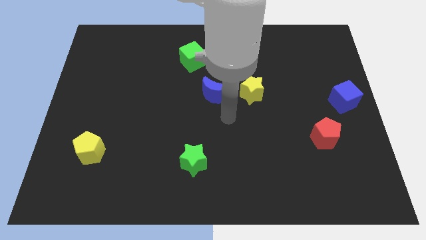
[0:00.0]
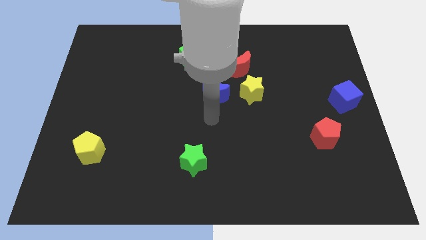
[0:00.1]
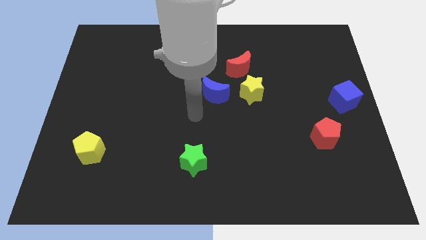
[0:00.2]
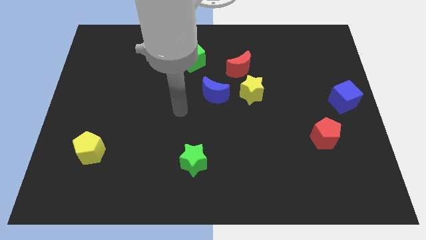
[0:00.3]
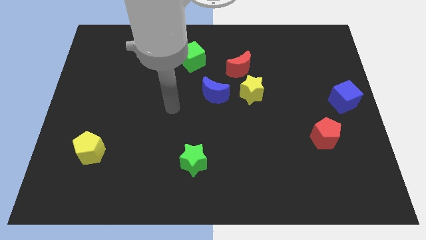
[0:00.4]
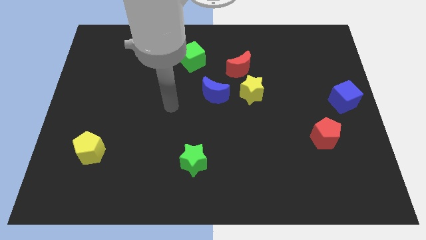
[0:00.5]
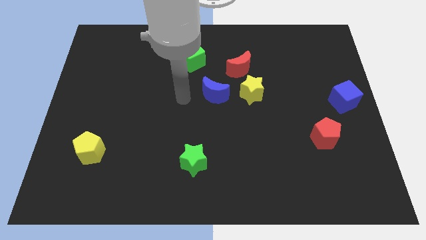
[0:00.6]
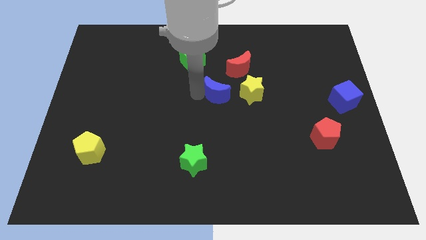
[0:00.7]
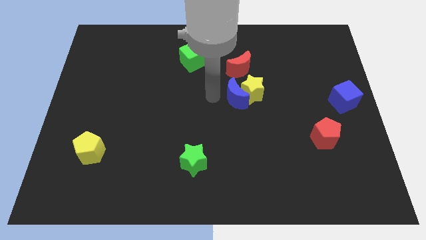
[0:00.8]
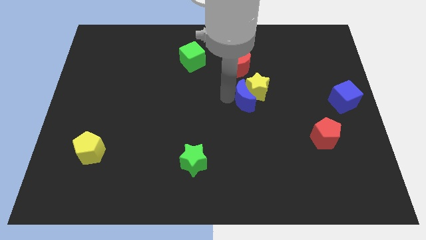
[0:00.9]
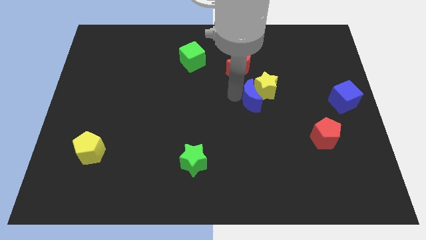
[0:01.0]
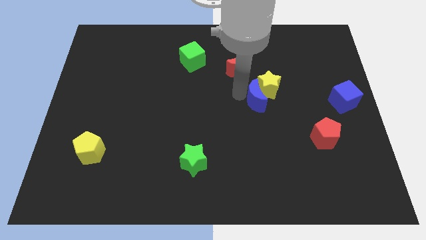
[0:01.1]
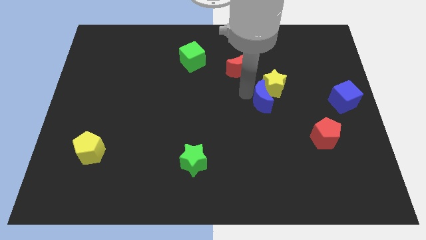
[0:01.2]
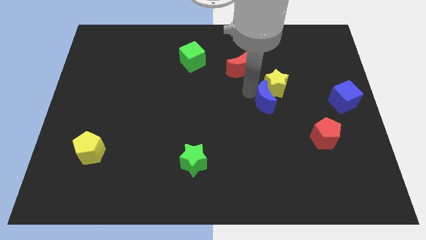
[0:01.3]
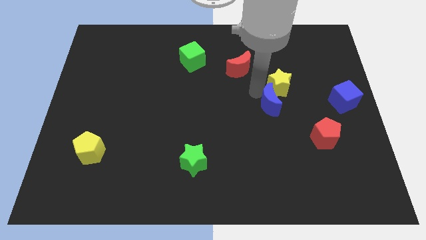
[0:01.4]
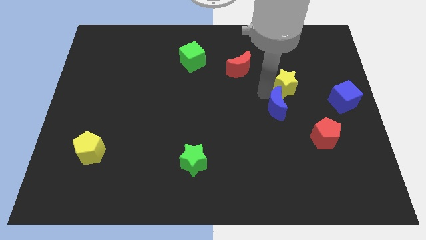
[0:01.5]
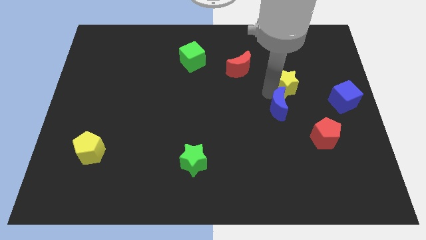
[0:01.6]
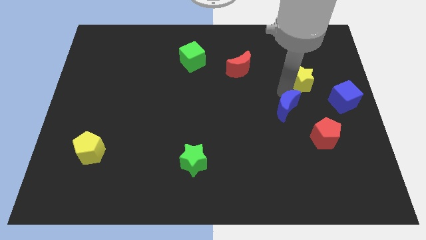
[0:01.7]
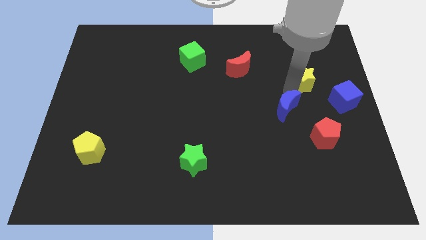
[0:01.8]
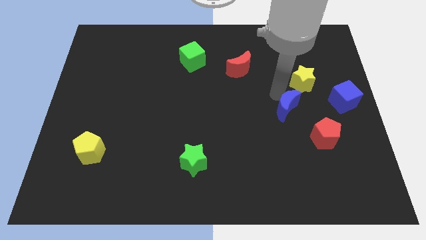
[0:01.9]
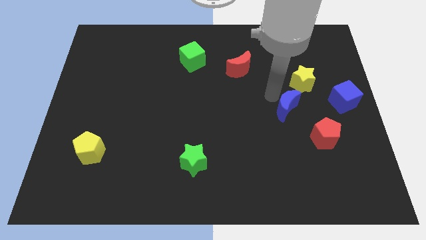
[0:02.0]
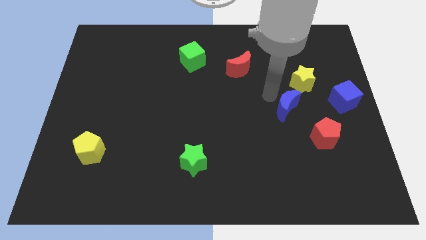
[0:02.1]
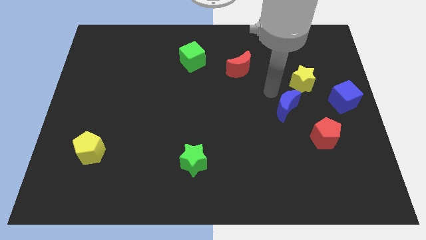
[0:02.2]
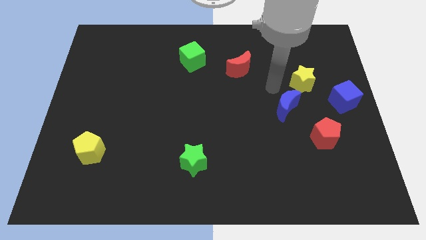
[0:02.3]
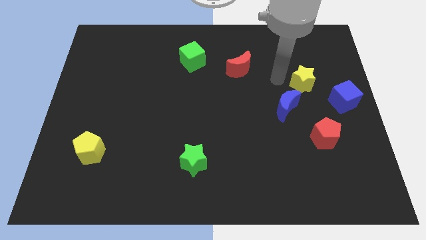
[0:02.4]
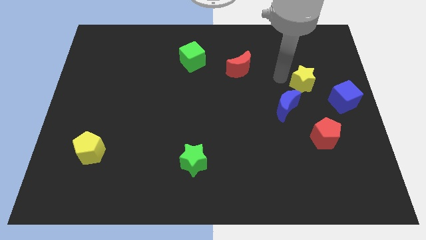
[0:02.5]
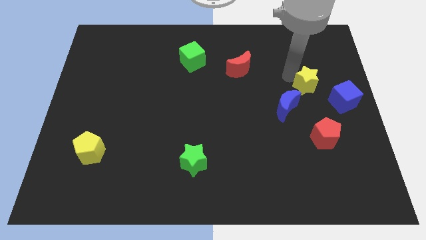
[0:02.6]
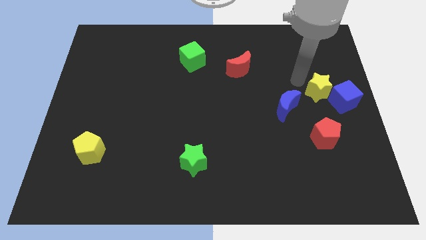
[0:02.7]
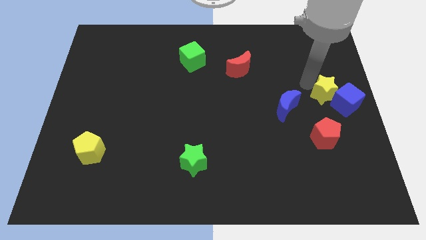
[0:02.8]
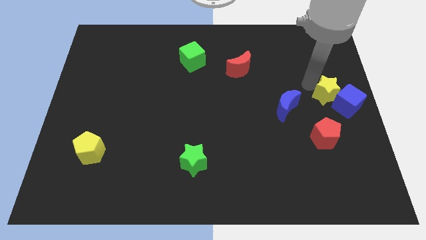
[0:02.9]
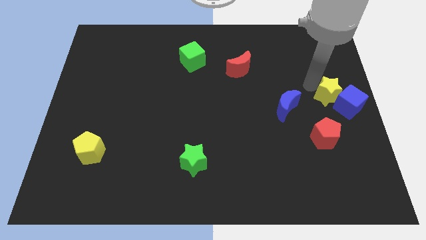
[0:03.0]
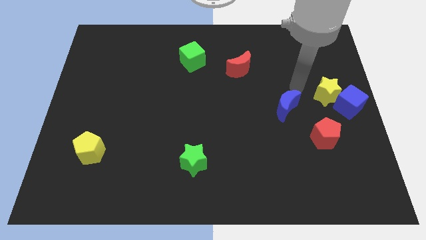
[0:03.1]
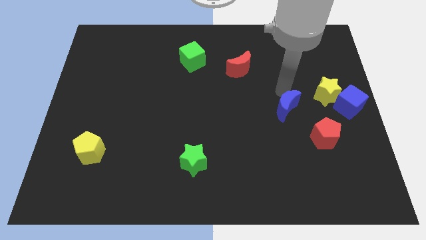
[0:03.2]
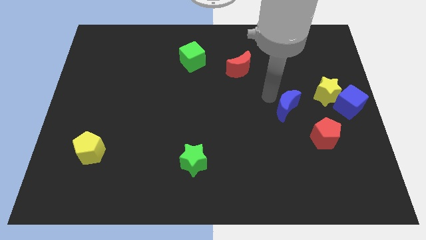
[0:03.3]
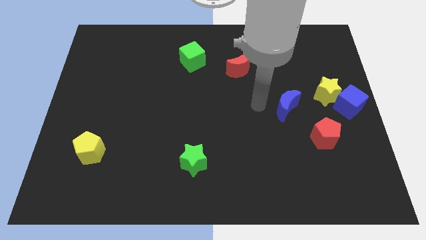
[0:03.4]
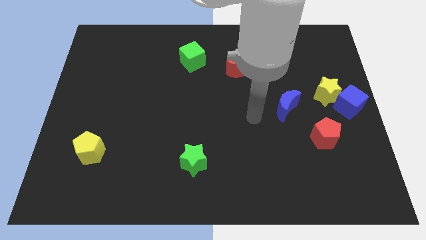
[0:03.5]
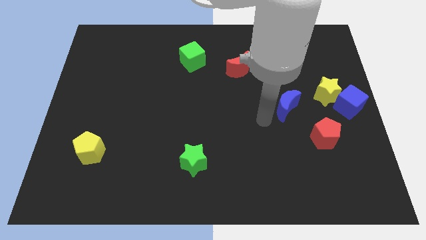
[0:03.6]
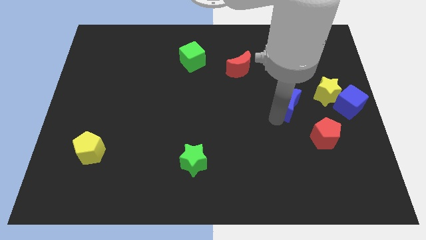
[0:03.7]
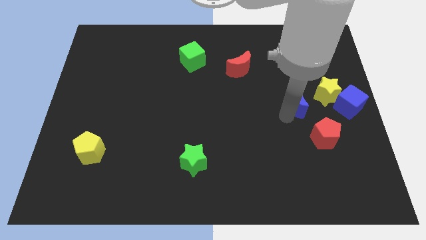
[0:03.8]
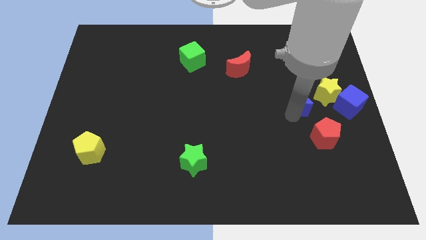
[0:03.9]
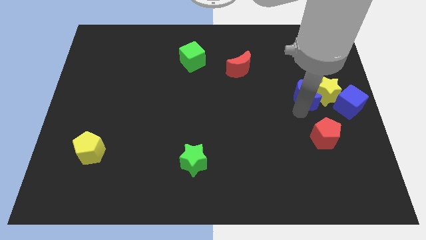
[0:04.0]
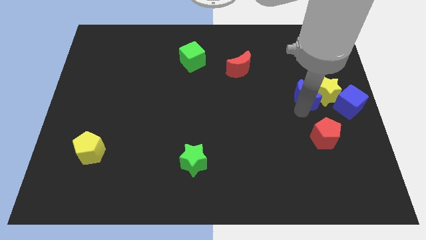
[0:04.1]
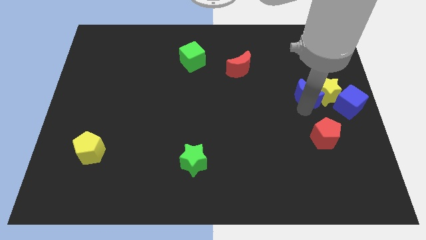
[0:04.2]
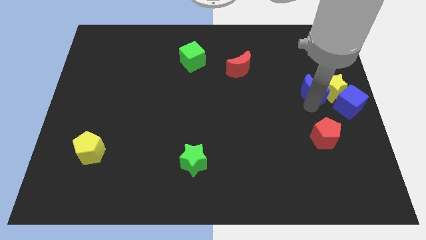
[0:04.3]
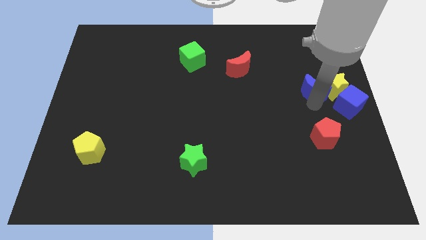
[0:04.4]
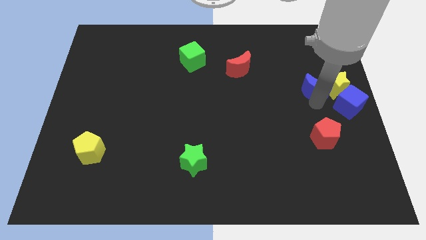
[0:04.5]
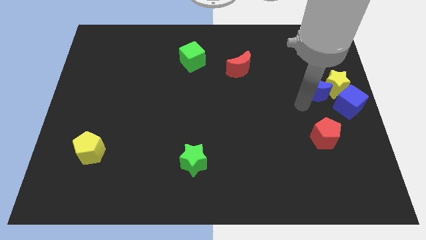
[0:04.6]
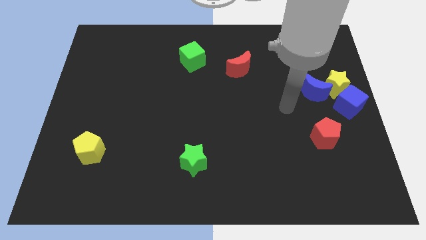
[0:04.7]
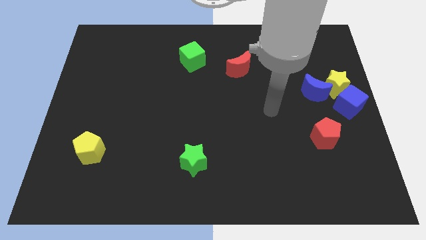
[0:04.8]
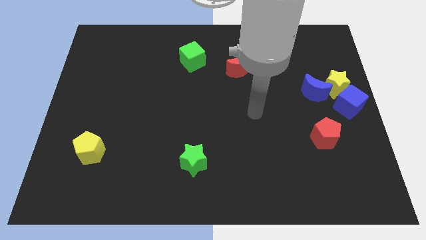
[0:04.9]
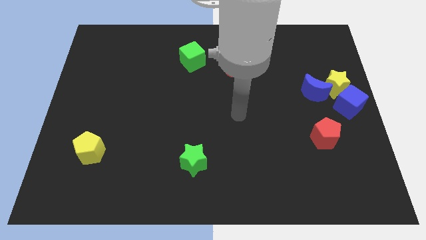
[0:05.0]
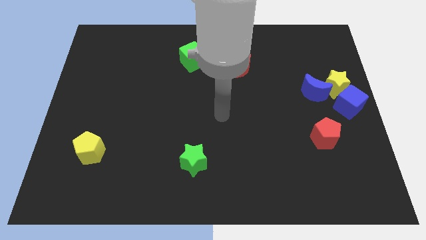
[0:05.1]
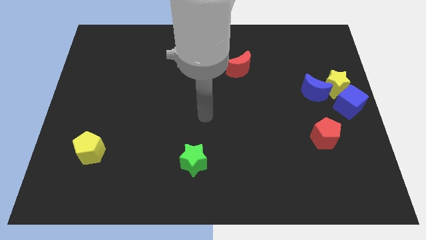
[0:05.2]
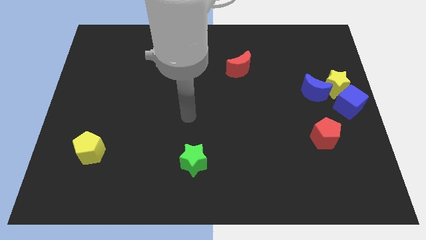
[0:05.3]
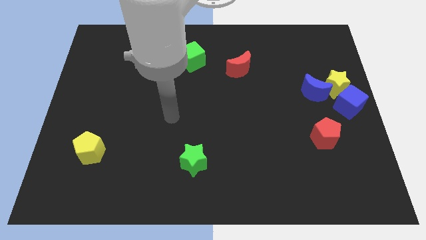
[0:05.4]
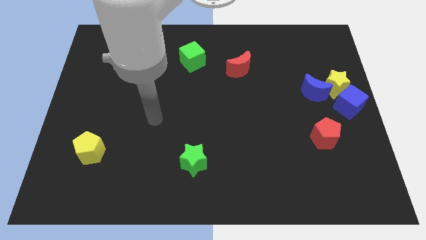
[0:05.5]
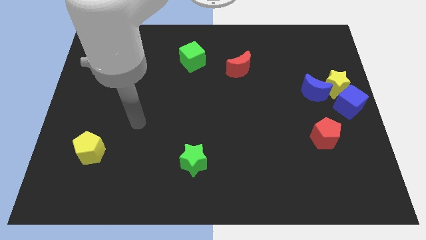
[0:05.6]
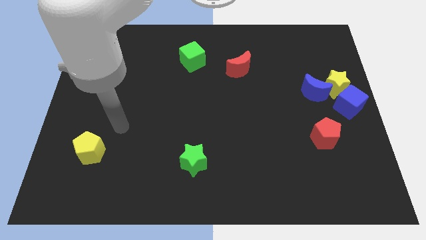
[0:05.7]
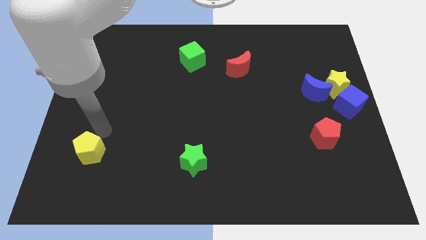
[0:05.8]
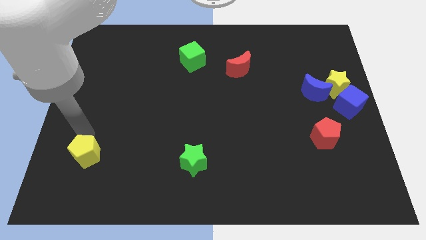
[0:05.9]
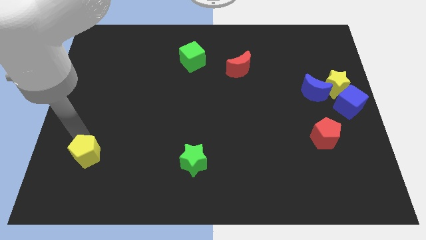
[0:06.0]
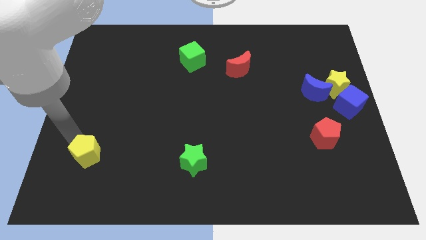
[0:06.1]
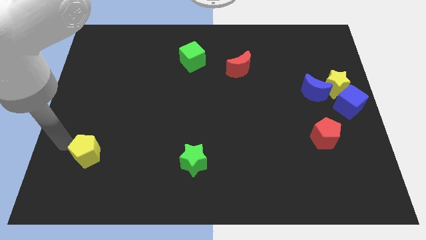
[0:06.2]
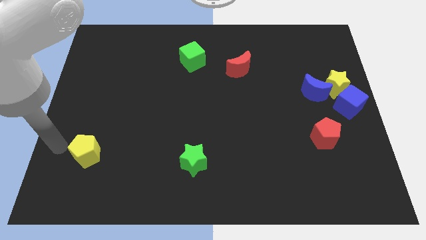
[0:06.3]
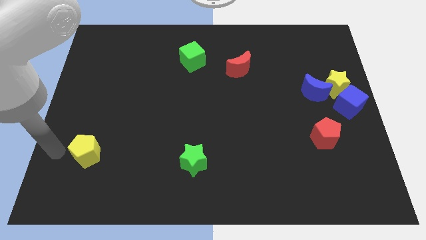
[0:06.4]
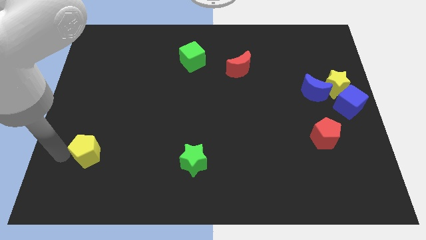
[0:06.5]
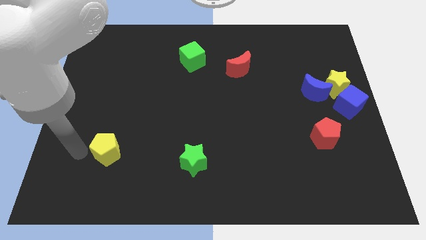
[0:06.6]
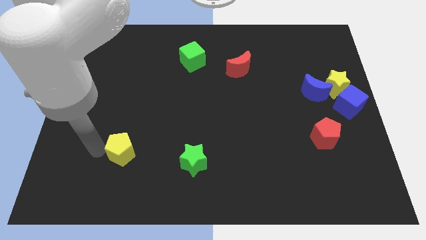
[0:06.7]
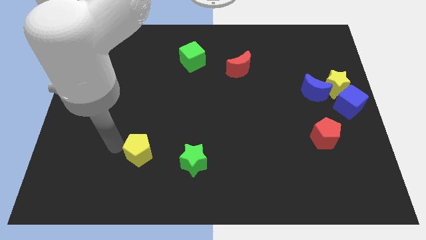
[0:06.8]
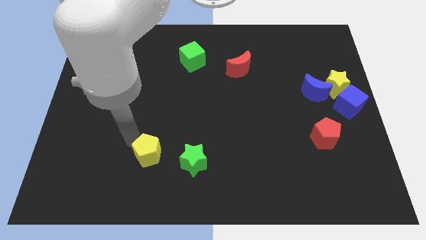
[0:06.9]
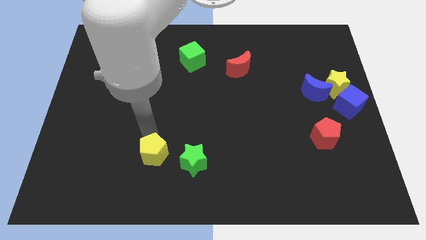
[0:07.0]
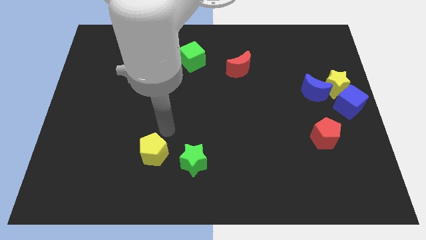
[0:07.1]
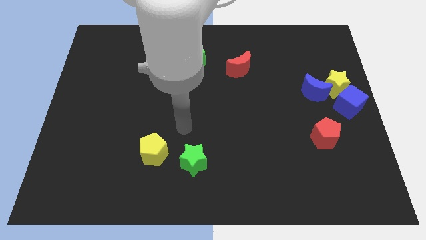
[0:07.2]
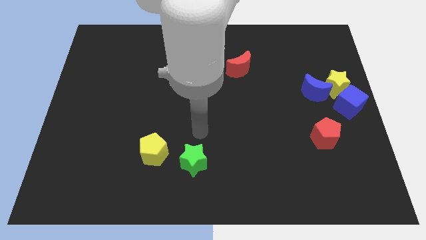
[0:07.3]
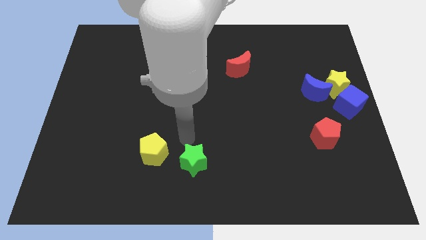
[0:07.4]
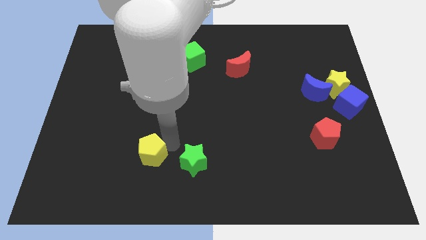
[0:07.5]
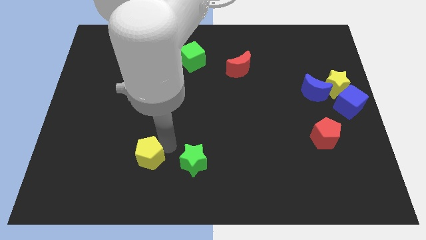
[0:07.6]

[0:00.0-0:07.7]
push the yellow pentagon towards the left of green star

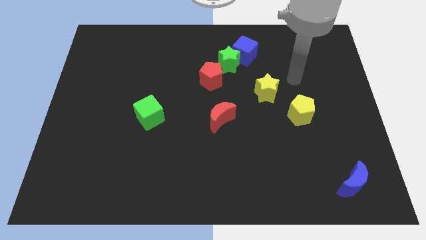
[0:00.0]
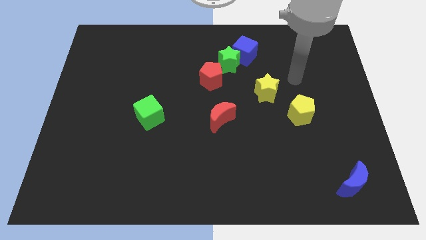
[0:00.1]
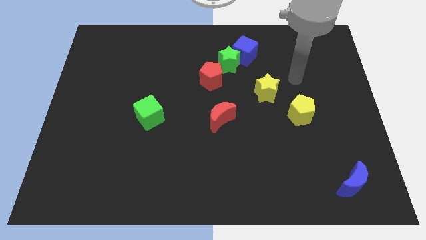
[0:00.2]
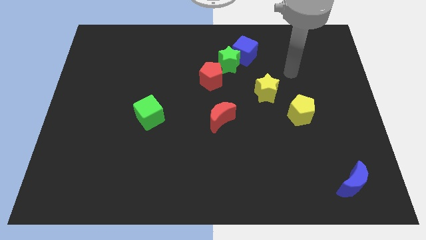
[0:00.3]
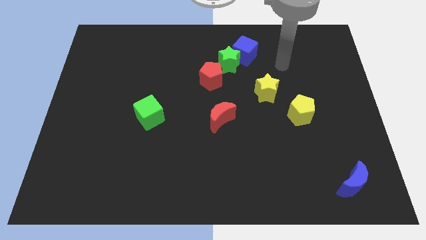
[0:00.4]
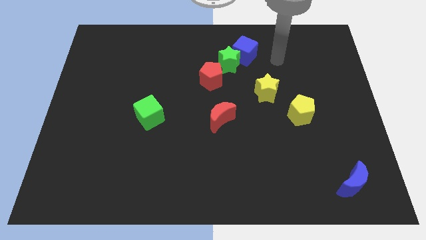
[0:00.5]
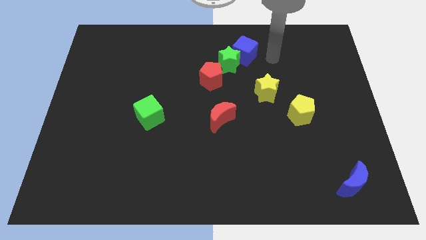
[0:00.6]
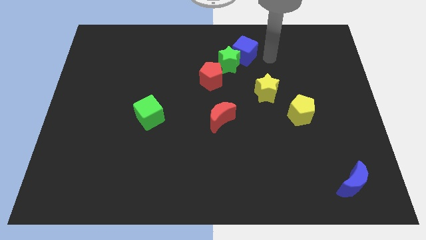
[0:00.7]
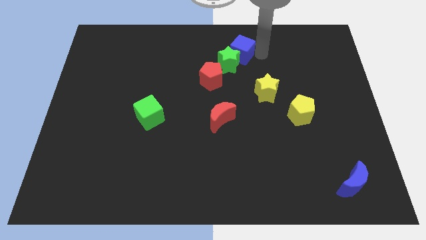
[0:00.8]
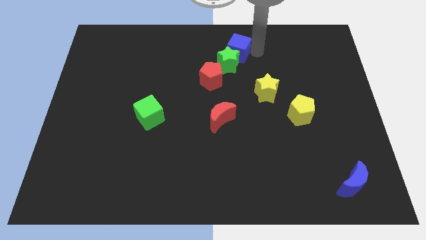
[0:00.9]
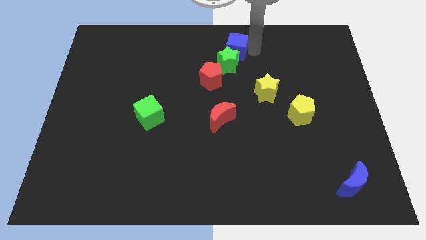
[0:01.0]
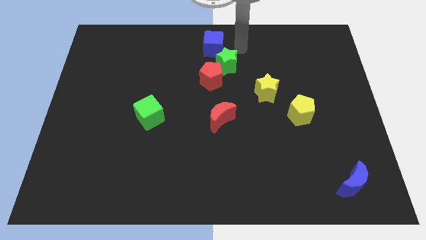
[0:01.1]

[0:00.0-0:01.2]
place the blue cube at the top center of the board
